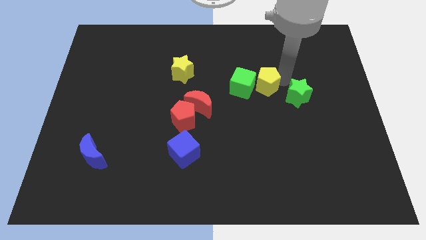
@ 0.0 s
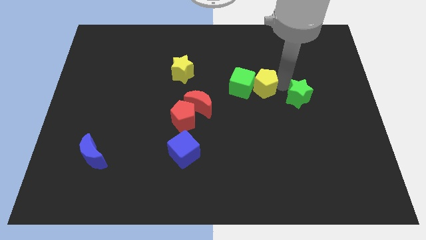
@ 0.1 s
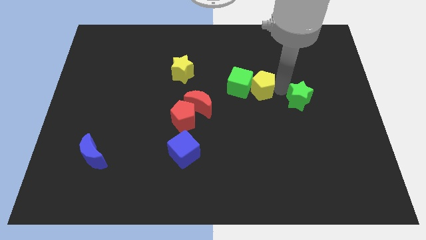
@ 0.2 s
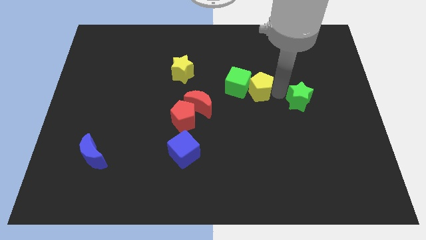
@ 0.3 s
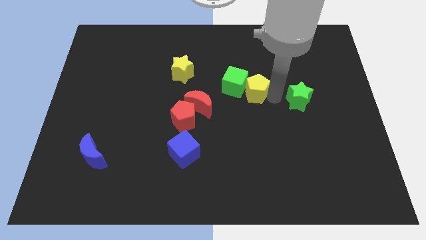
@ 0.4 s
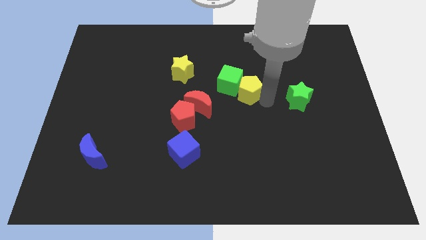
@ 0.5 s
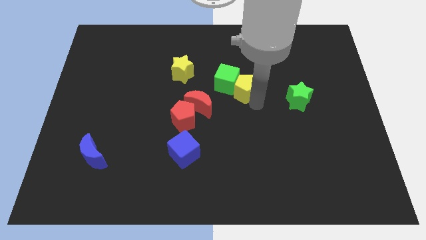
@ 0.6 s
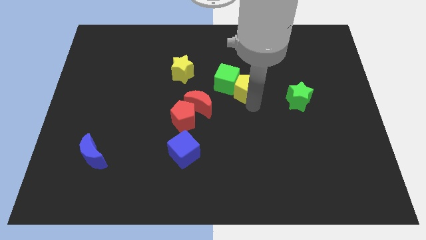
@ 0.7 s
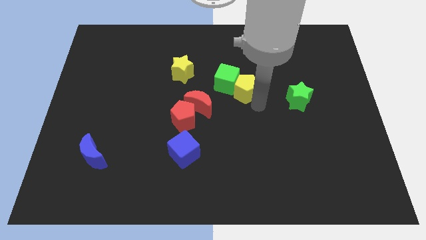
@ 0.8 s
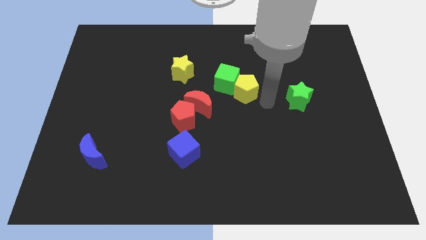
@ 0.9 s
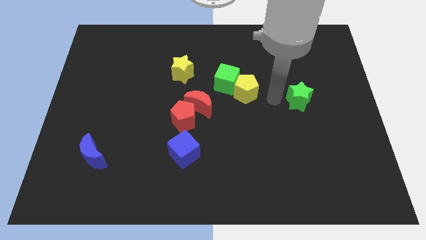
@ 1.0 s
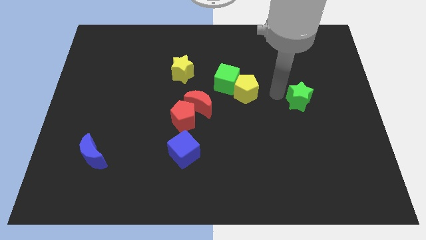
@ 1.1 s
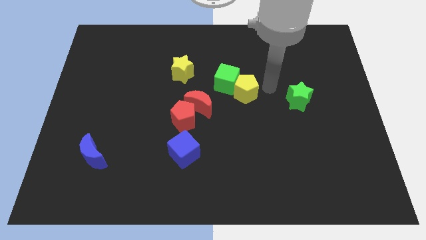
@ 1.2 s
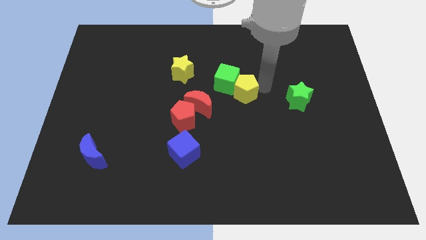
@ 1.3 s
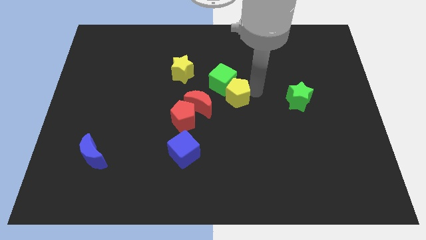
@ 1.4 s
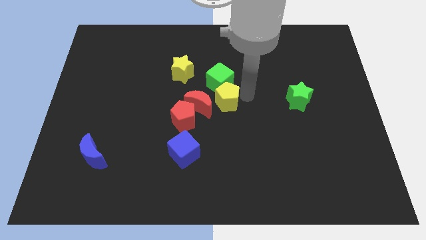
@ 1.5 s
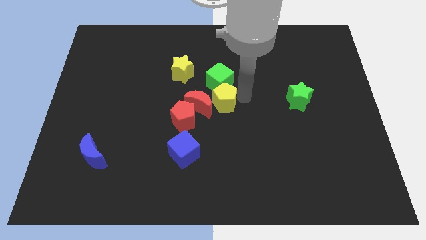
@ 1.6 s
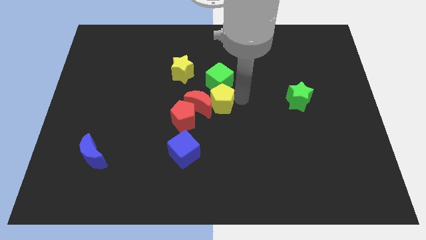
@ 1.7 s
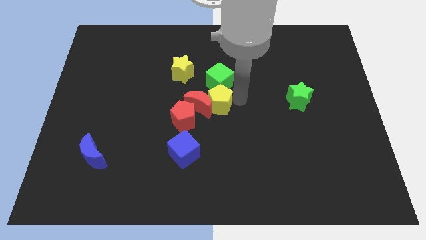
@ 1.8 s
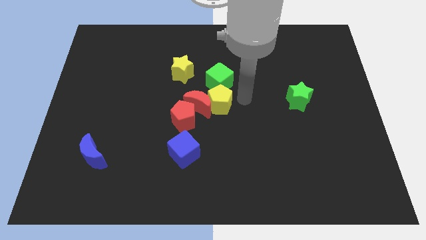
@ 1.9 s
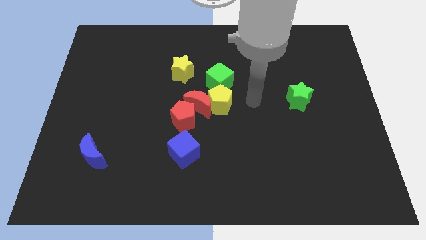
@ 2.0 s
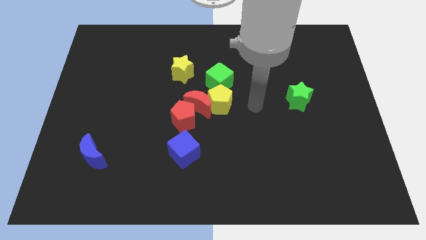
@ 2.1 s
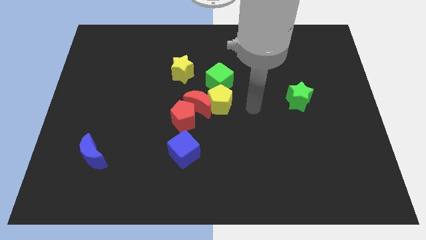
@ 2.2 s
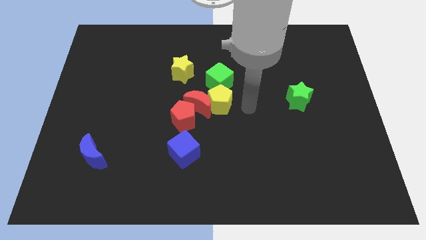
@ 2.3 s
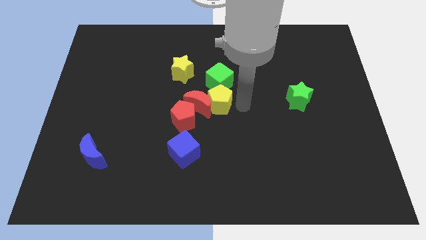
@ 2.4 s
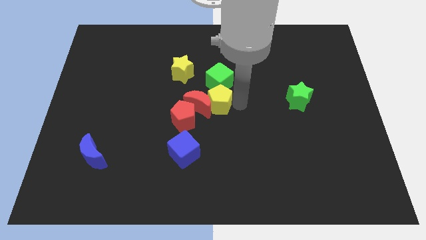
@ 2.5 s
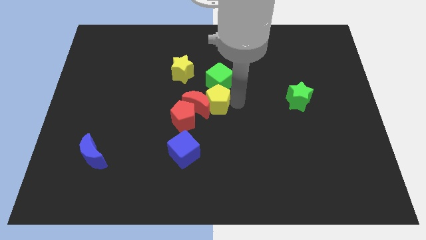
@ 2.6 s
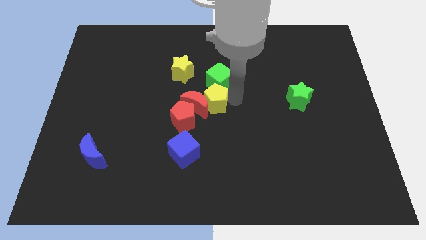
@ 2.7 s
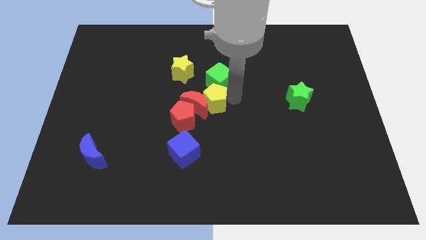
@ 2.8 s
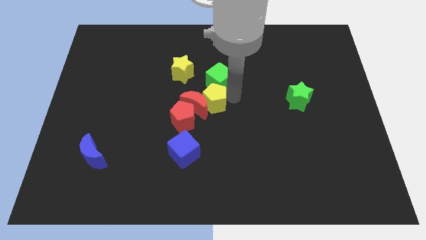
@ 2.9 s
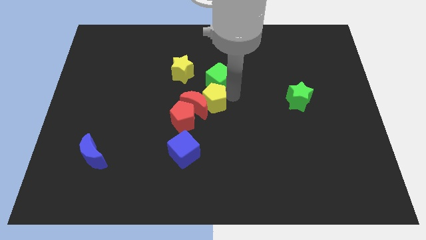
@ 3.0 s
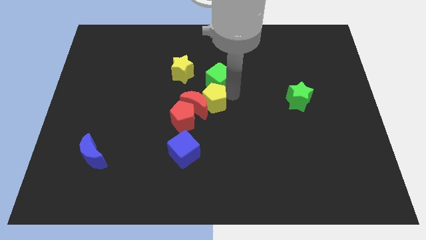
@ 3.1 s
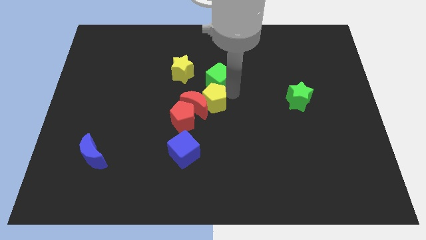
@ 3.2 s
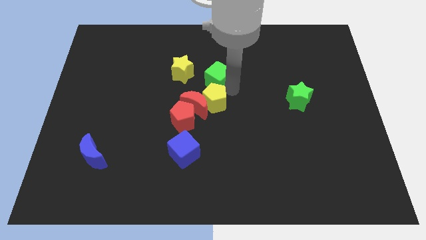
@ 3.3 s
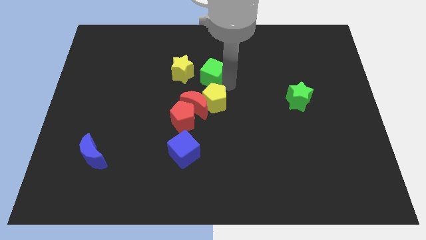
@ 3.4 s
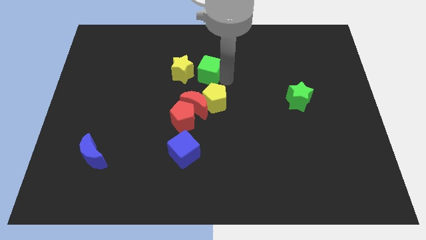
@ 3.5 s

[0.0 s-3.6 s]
push the yellow pentagon into the red moon

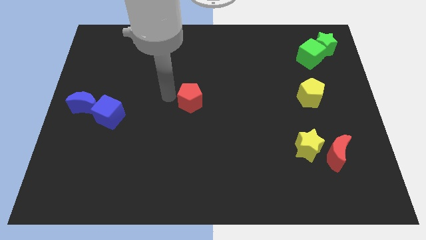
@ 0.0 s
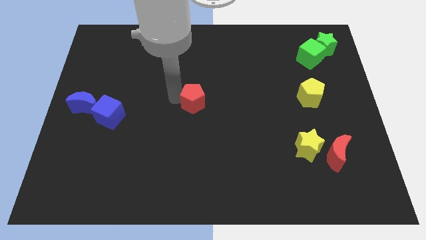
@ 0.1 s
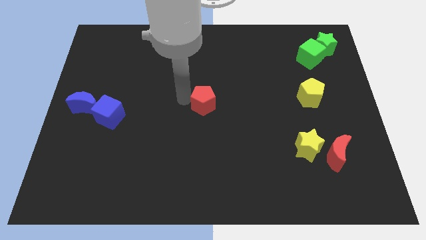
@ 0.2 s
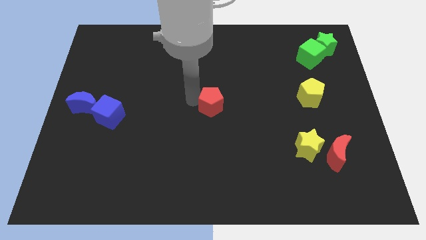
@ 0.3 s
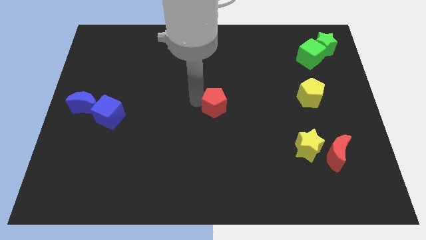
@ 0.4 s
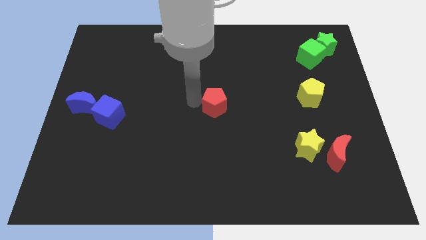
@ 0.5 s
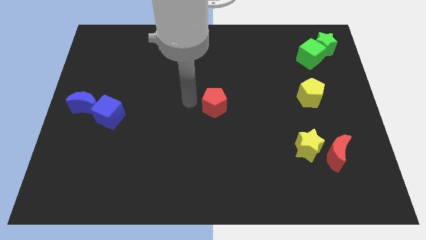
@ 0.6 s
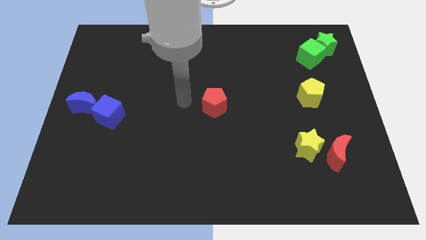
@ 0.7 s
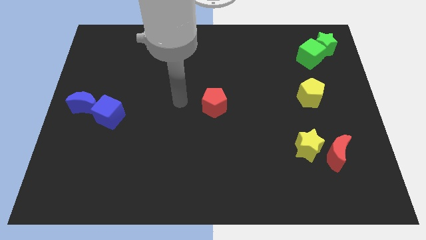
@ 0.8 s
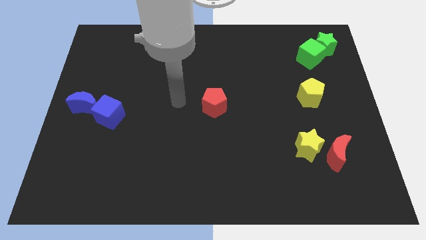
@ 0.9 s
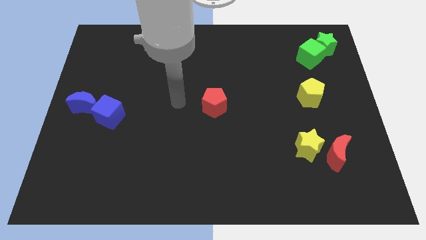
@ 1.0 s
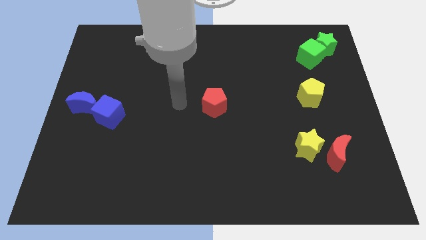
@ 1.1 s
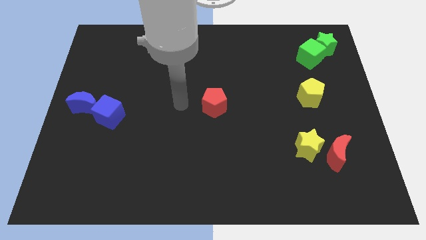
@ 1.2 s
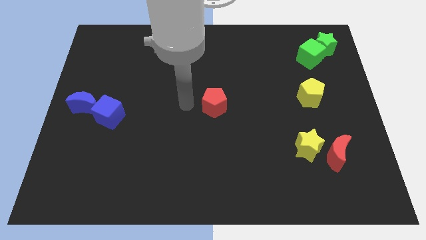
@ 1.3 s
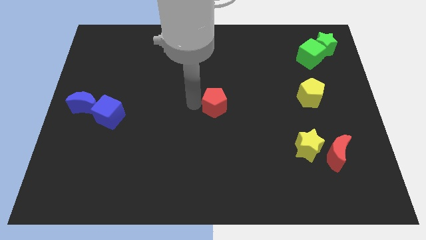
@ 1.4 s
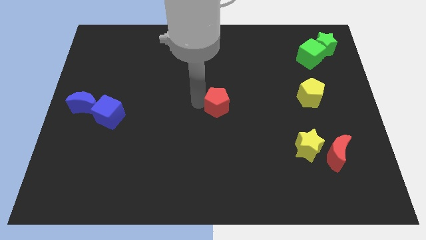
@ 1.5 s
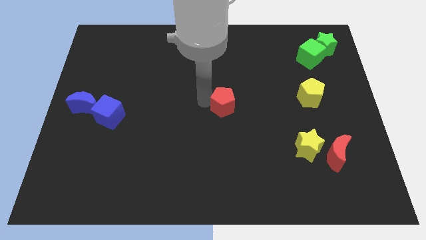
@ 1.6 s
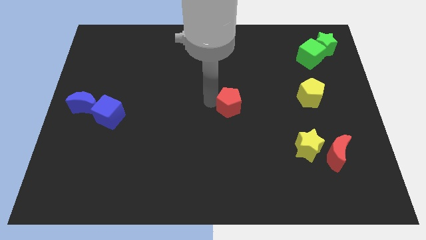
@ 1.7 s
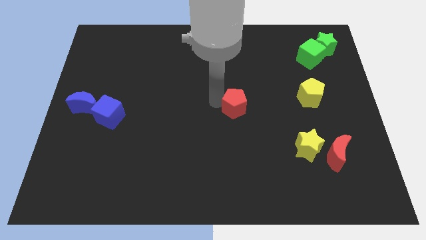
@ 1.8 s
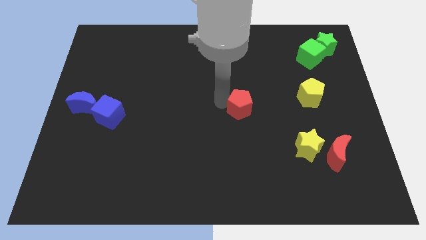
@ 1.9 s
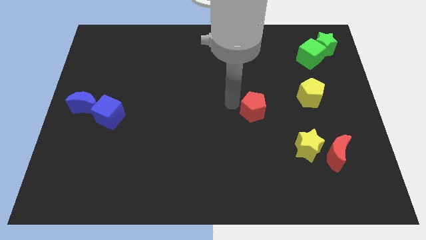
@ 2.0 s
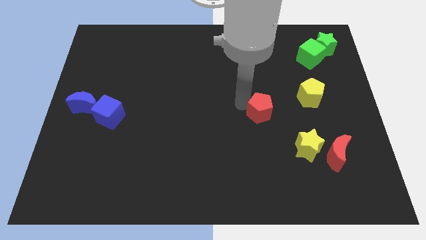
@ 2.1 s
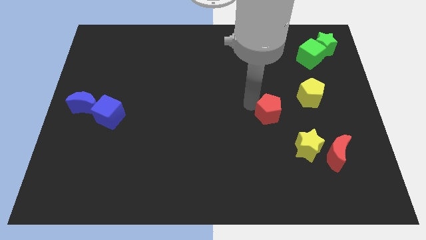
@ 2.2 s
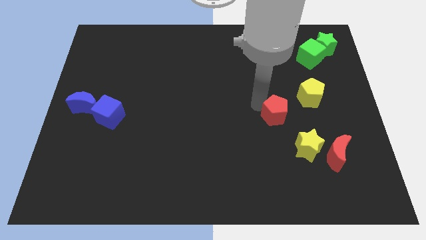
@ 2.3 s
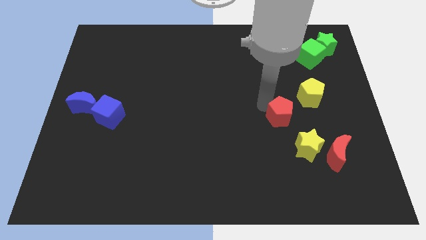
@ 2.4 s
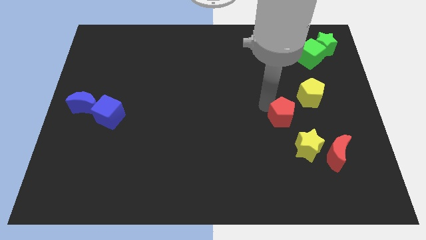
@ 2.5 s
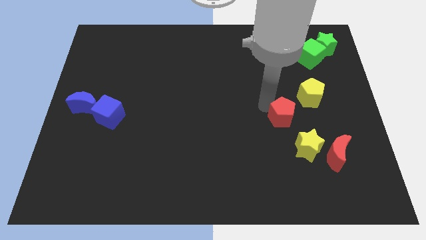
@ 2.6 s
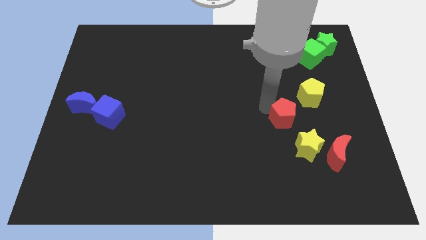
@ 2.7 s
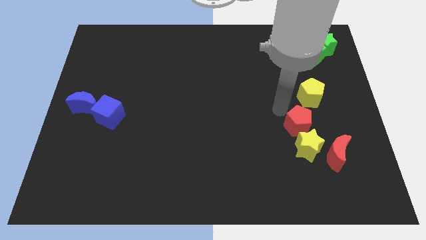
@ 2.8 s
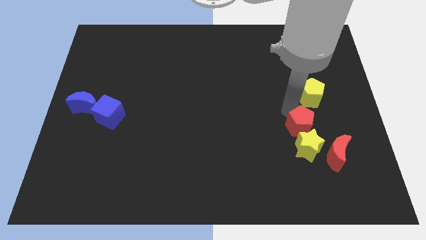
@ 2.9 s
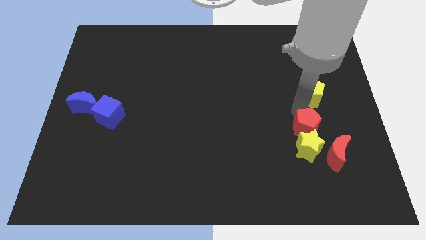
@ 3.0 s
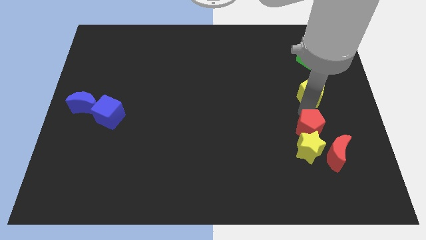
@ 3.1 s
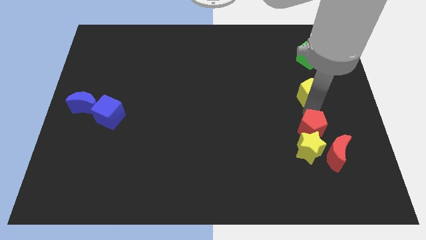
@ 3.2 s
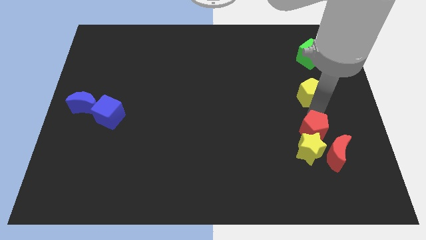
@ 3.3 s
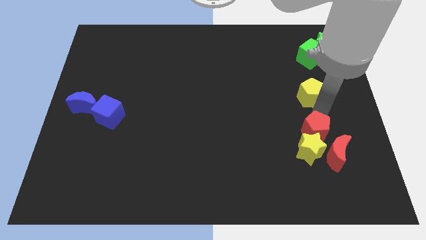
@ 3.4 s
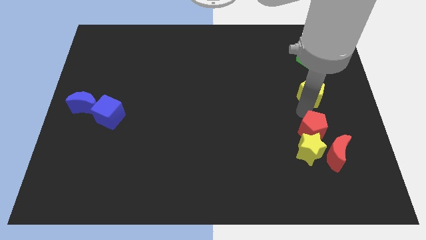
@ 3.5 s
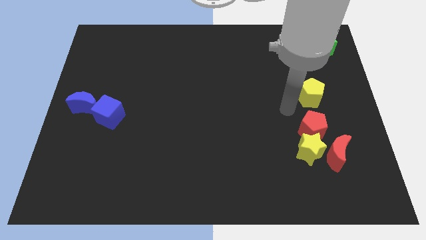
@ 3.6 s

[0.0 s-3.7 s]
push the red pentagon into yellow star

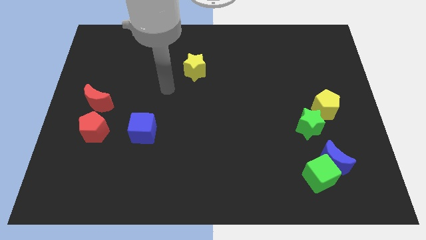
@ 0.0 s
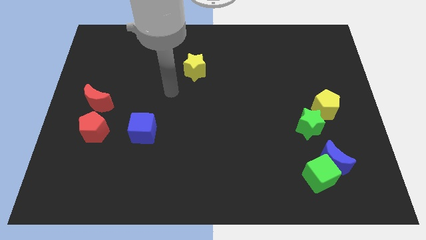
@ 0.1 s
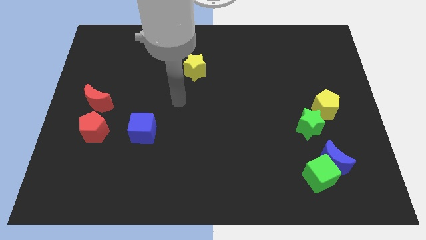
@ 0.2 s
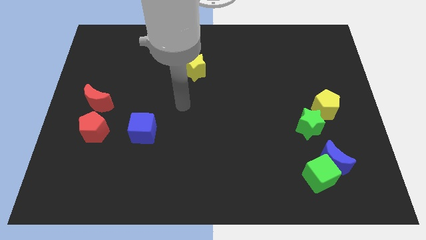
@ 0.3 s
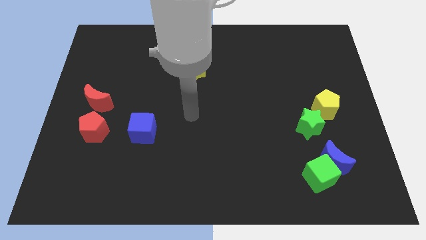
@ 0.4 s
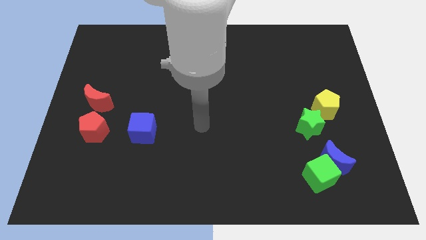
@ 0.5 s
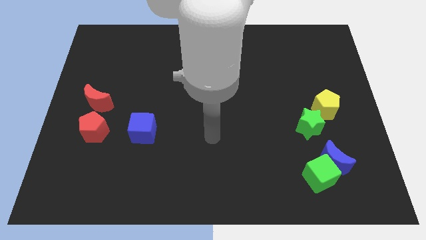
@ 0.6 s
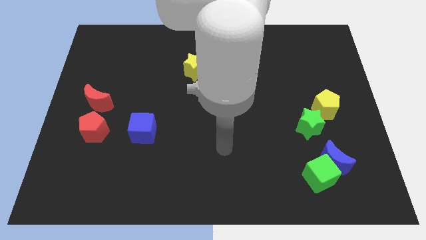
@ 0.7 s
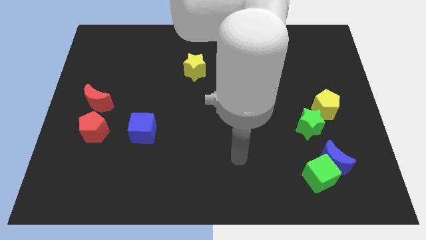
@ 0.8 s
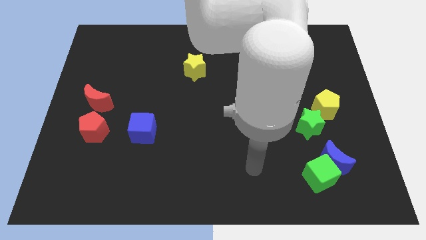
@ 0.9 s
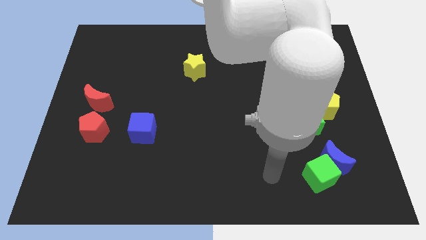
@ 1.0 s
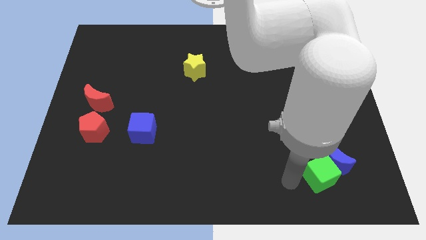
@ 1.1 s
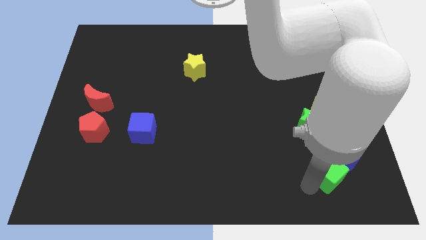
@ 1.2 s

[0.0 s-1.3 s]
move your arm left bottom of the green cube

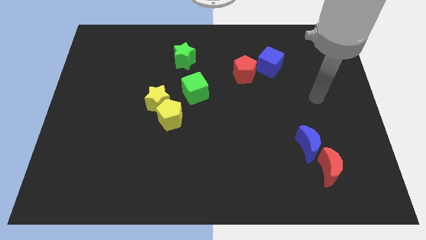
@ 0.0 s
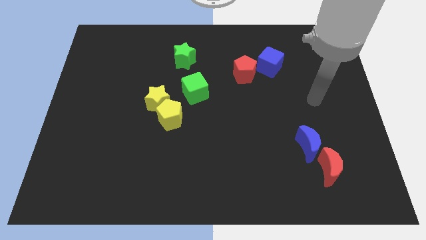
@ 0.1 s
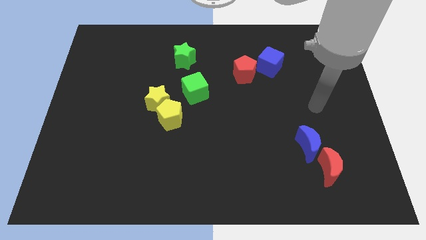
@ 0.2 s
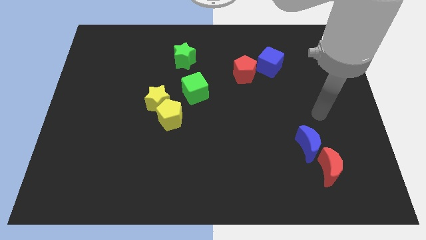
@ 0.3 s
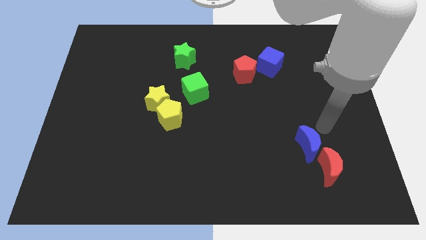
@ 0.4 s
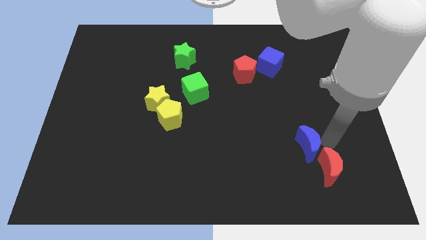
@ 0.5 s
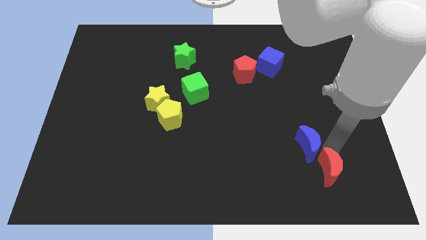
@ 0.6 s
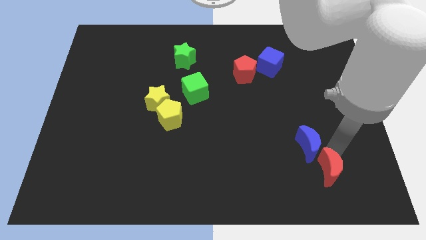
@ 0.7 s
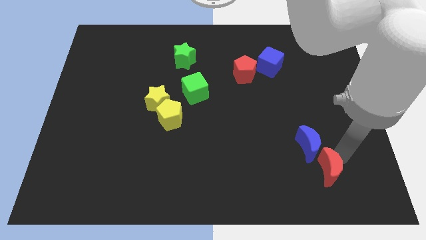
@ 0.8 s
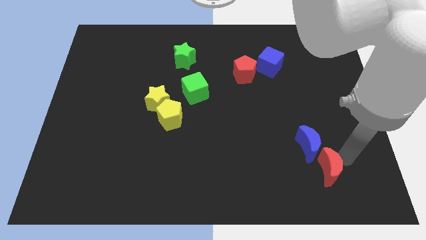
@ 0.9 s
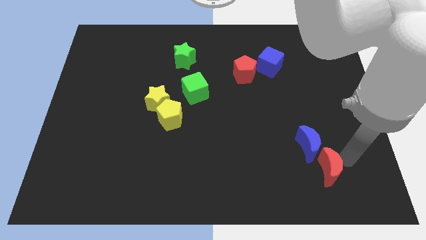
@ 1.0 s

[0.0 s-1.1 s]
point your arm at the right of the red crescent
